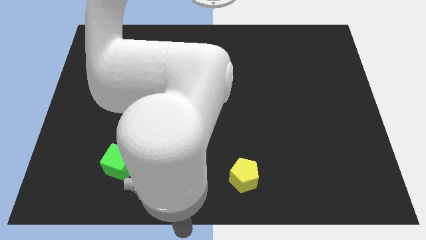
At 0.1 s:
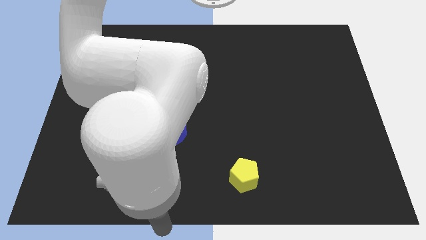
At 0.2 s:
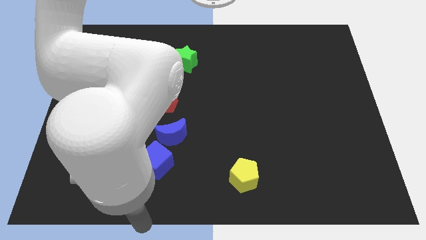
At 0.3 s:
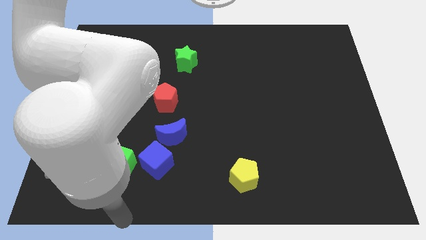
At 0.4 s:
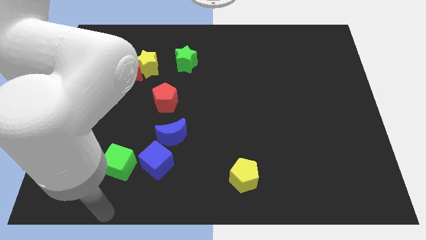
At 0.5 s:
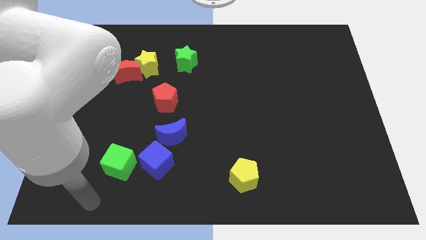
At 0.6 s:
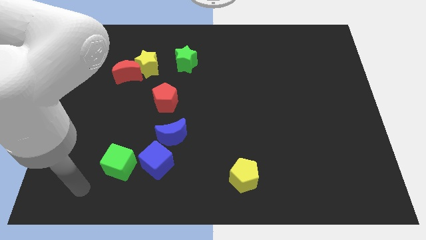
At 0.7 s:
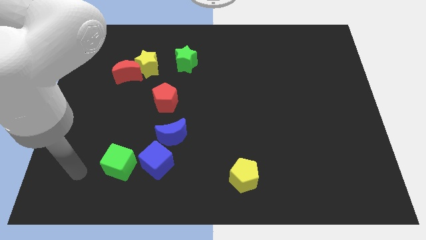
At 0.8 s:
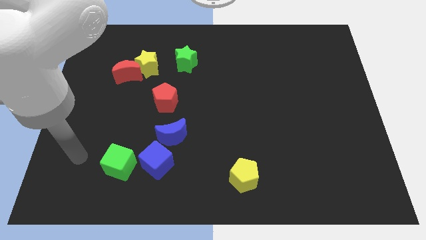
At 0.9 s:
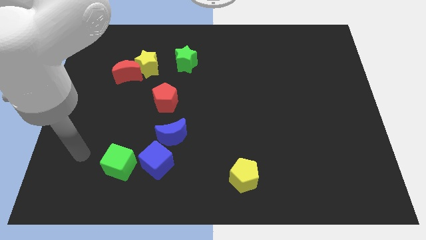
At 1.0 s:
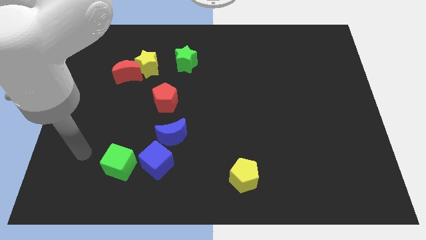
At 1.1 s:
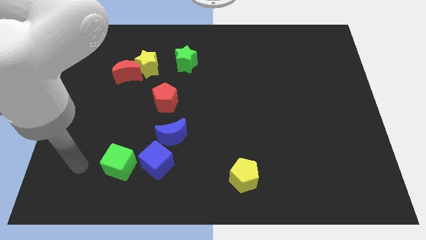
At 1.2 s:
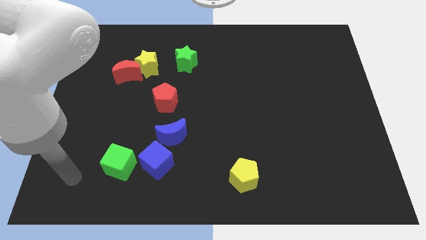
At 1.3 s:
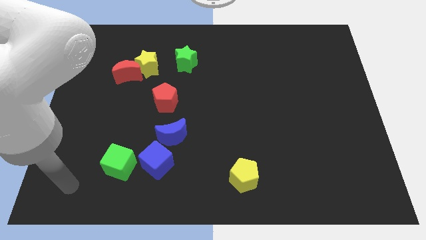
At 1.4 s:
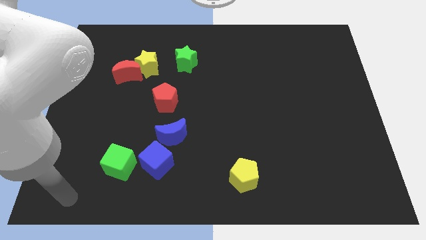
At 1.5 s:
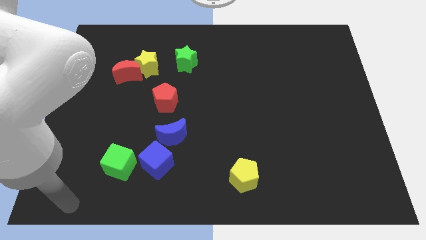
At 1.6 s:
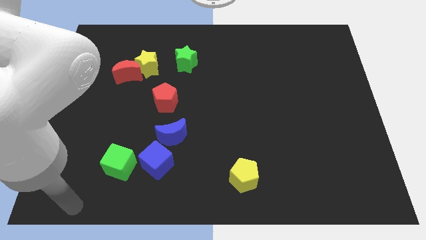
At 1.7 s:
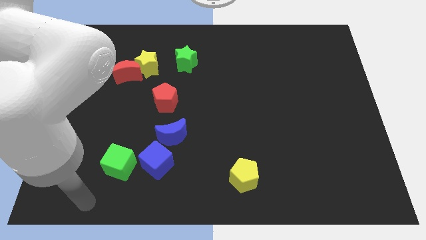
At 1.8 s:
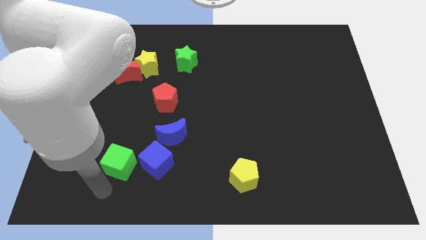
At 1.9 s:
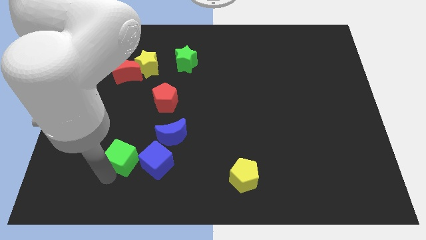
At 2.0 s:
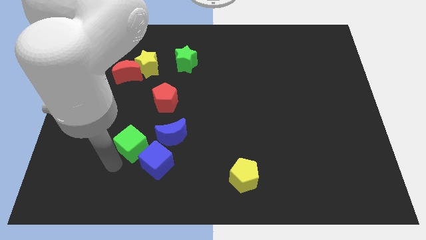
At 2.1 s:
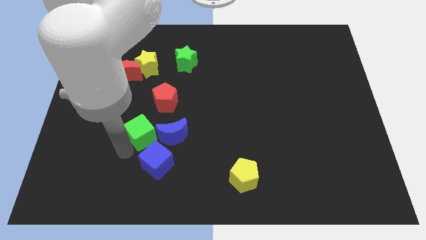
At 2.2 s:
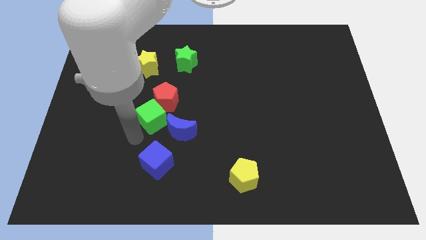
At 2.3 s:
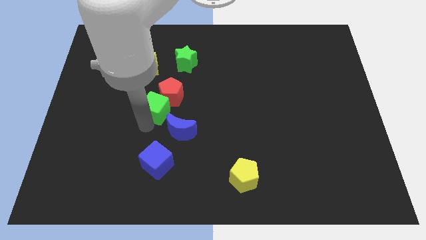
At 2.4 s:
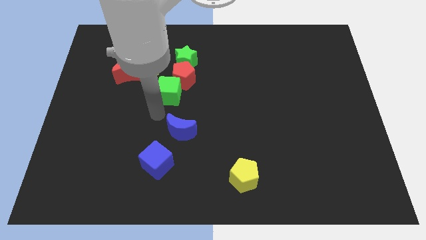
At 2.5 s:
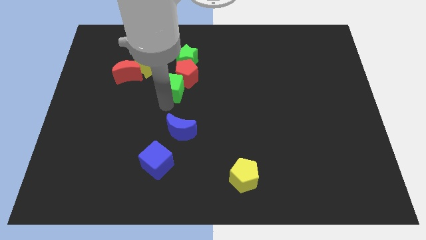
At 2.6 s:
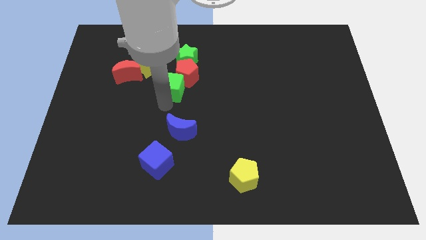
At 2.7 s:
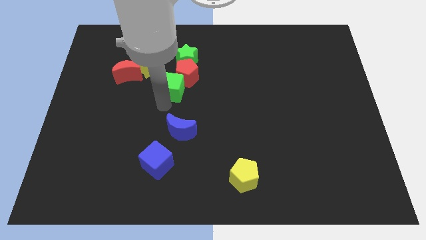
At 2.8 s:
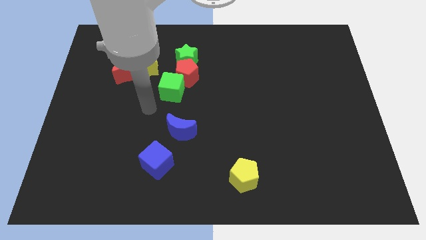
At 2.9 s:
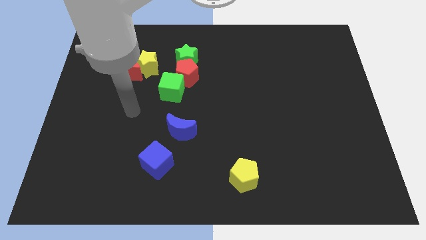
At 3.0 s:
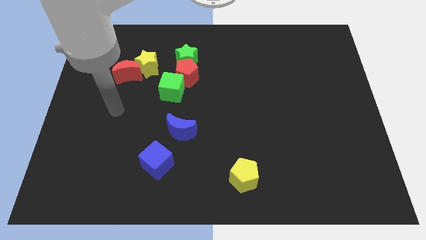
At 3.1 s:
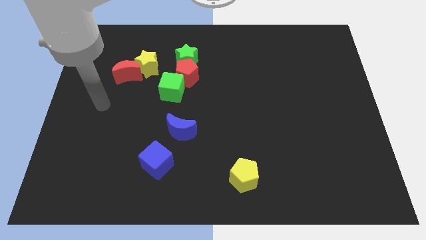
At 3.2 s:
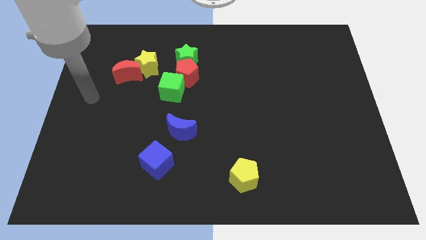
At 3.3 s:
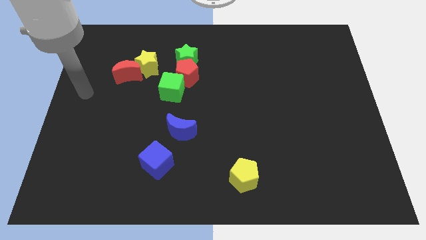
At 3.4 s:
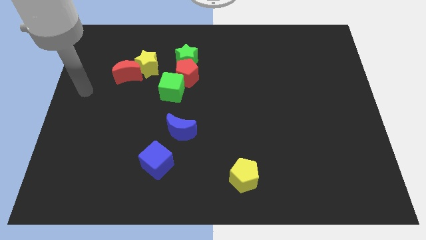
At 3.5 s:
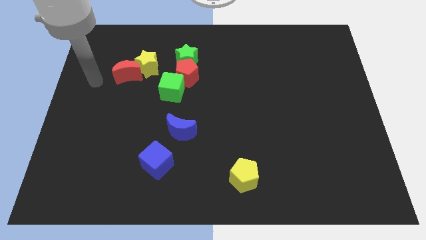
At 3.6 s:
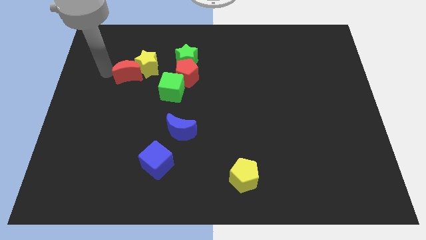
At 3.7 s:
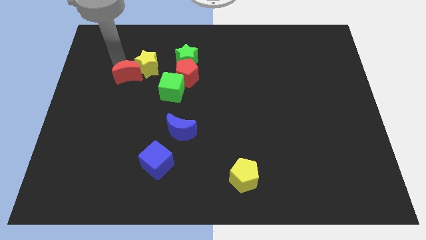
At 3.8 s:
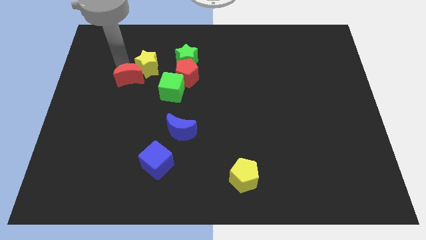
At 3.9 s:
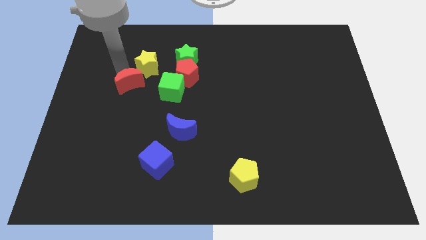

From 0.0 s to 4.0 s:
push the green cube into the red pentagon

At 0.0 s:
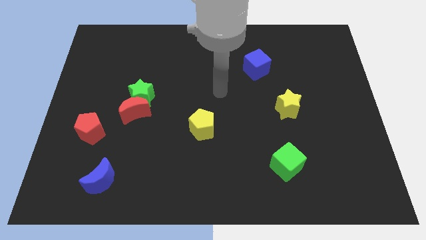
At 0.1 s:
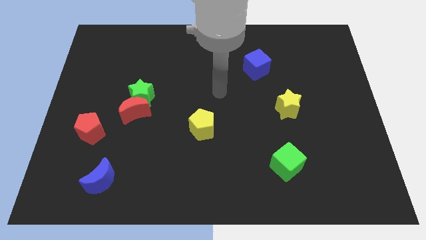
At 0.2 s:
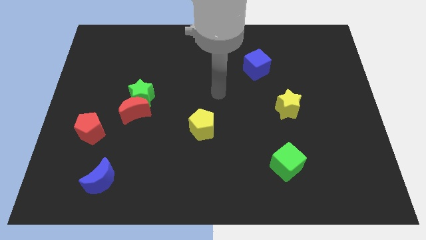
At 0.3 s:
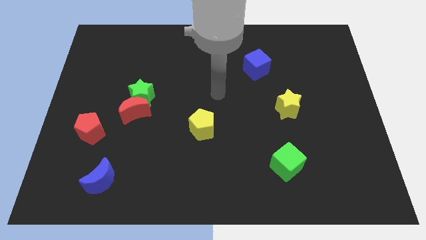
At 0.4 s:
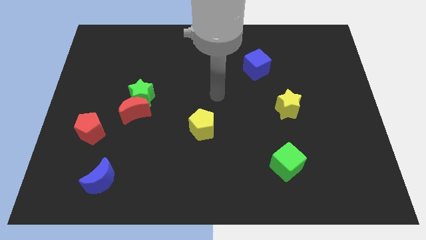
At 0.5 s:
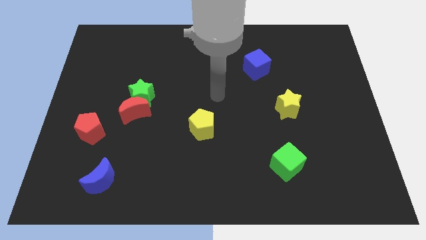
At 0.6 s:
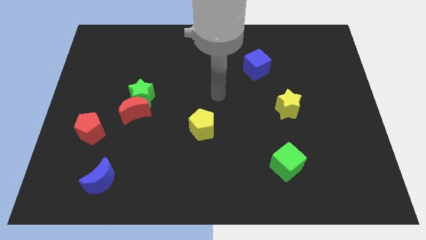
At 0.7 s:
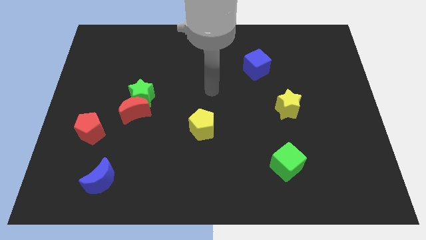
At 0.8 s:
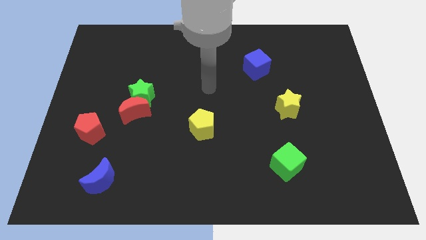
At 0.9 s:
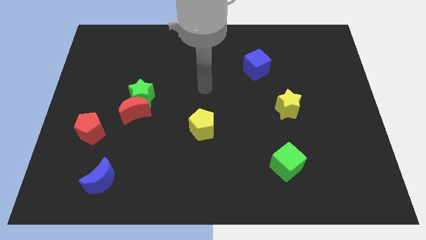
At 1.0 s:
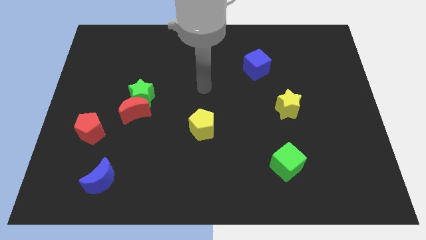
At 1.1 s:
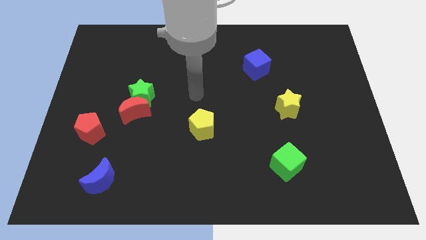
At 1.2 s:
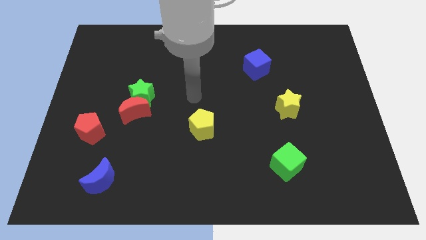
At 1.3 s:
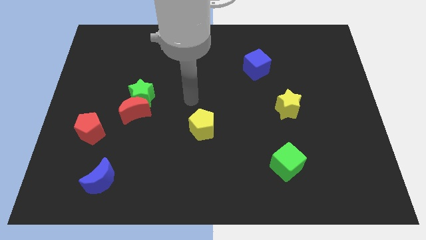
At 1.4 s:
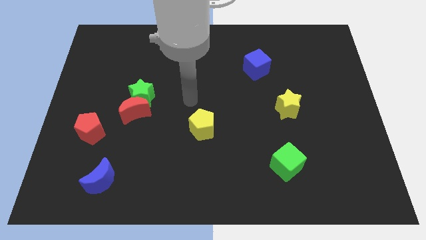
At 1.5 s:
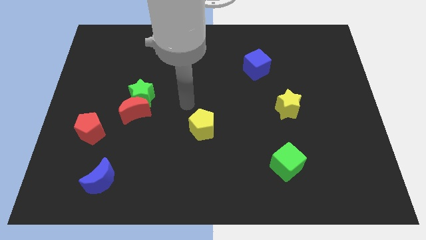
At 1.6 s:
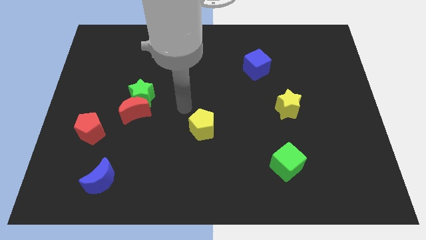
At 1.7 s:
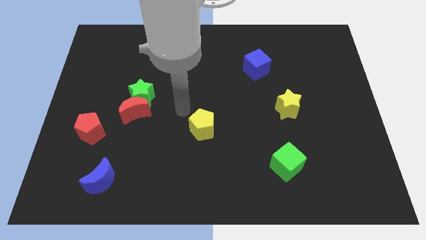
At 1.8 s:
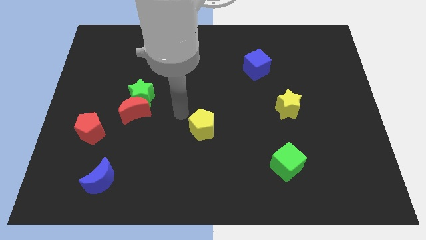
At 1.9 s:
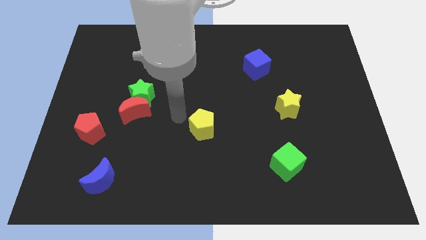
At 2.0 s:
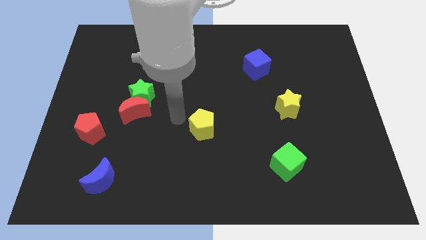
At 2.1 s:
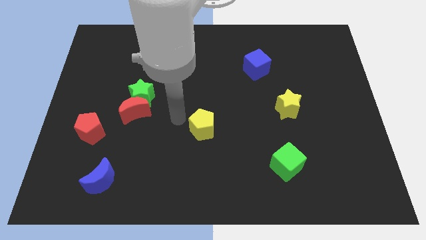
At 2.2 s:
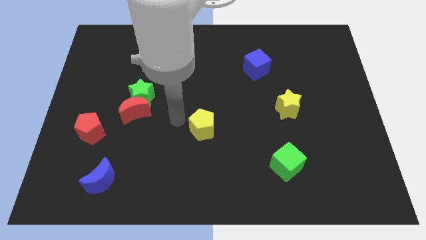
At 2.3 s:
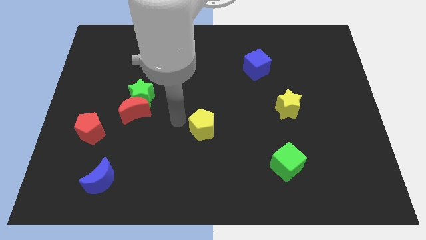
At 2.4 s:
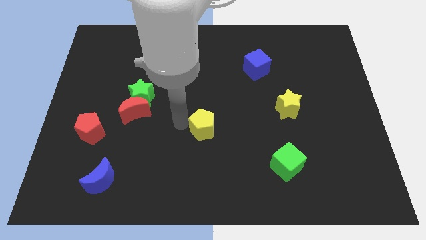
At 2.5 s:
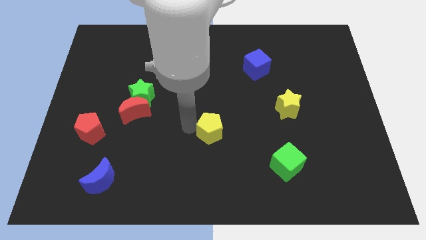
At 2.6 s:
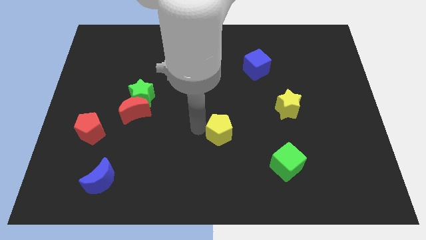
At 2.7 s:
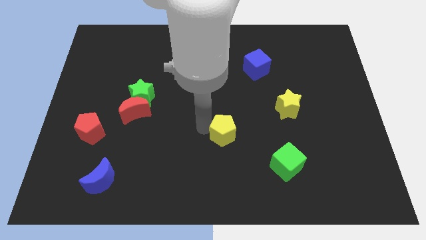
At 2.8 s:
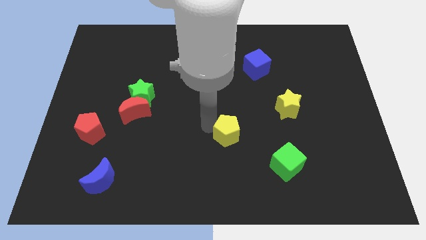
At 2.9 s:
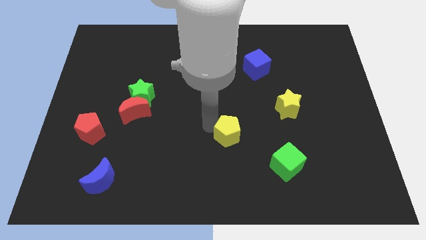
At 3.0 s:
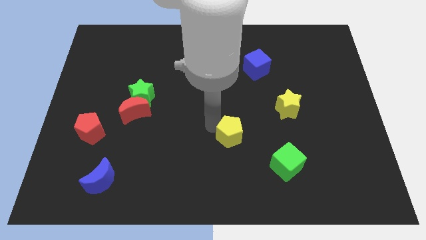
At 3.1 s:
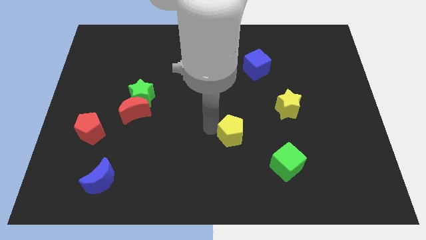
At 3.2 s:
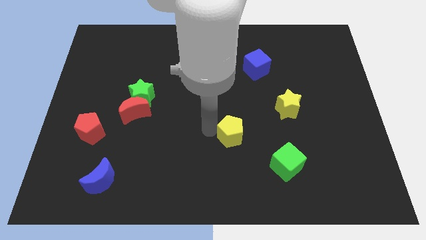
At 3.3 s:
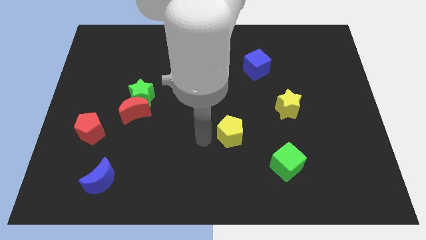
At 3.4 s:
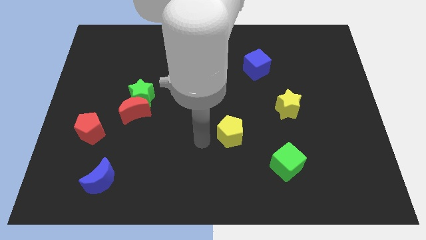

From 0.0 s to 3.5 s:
push the pentagon towards the bottom right of the board

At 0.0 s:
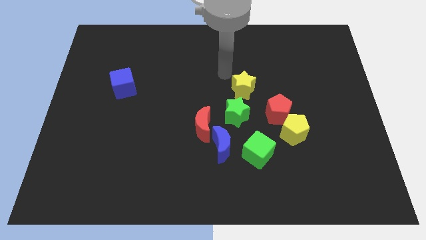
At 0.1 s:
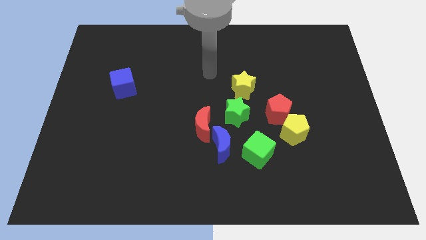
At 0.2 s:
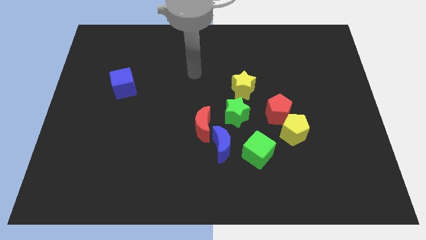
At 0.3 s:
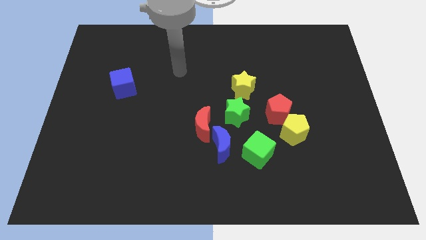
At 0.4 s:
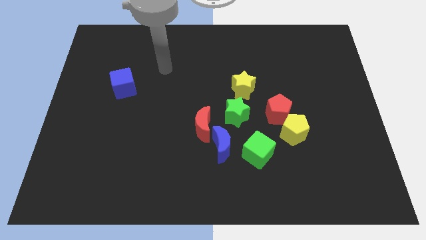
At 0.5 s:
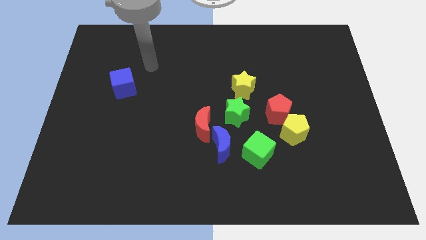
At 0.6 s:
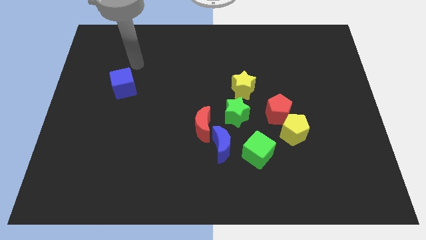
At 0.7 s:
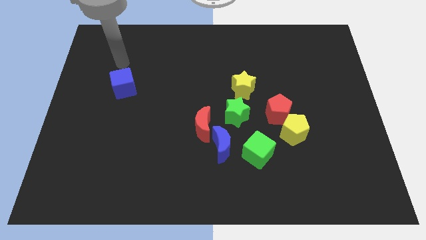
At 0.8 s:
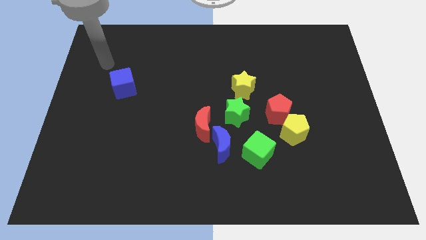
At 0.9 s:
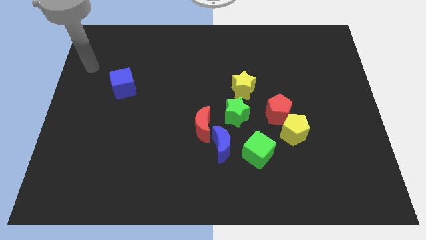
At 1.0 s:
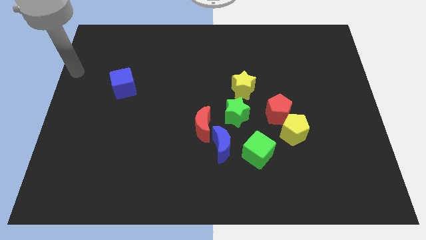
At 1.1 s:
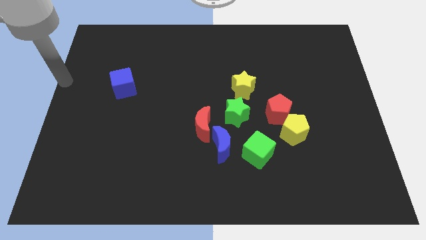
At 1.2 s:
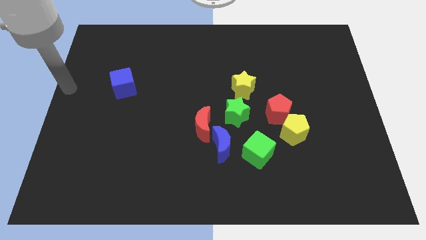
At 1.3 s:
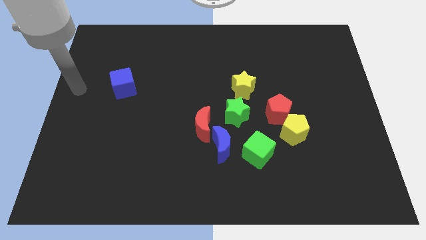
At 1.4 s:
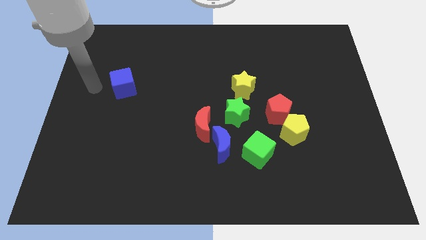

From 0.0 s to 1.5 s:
move your arm to the left side of the blue cube
